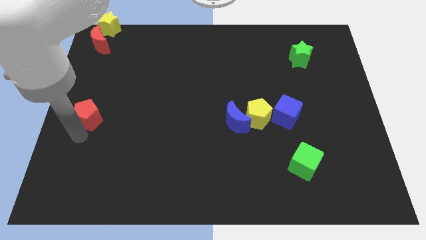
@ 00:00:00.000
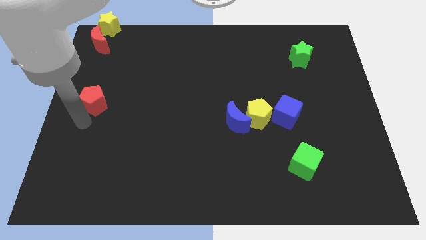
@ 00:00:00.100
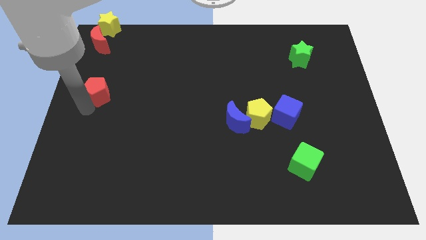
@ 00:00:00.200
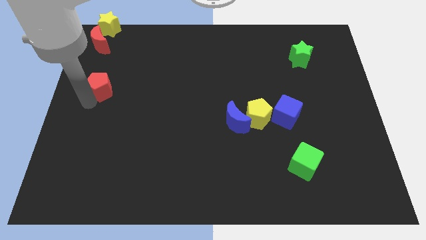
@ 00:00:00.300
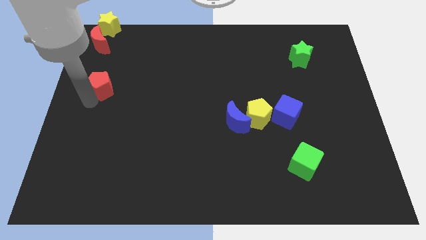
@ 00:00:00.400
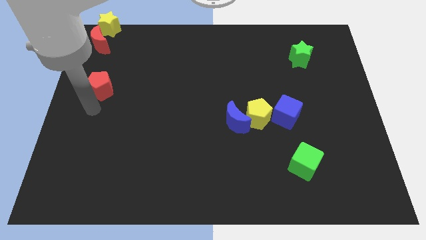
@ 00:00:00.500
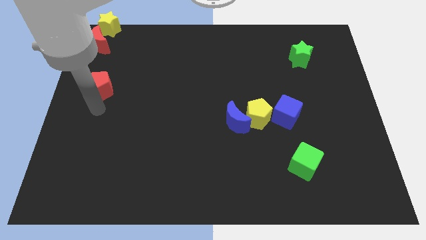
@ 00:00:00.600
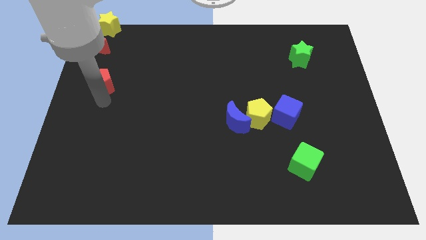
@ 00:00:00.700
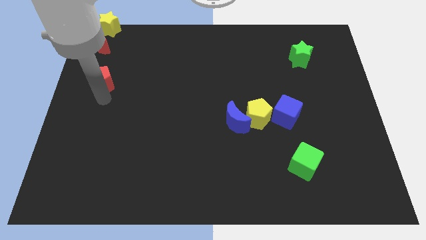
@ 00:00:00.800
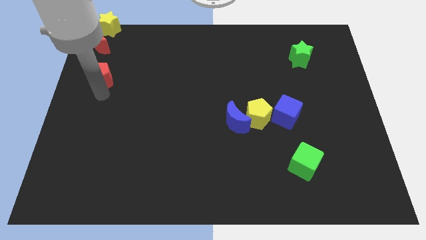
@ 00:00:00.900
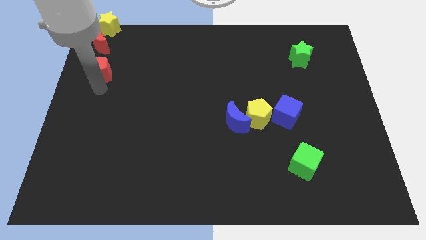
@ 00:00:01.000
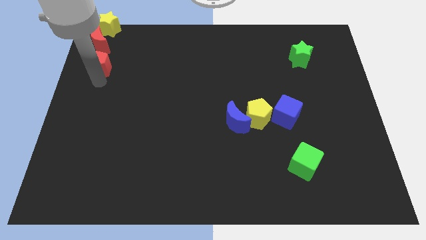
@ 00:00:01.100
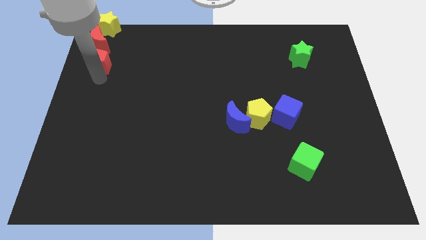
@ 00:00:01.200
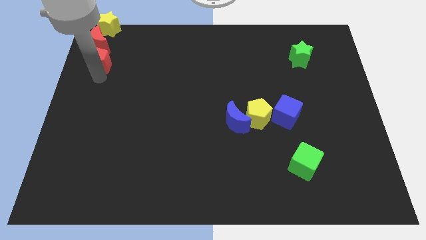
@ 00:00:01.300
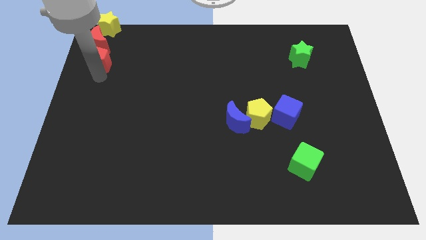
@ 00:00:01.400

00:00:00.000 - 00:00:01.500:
place red pentagon below red crescent

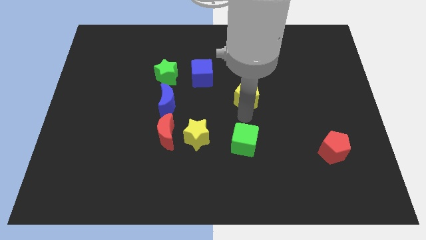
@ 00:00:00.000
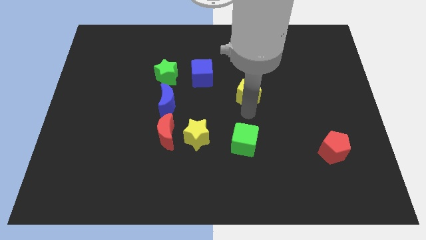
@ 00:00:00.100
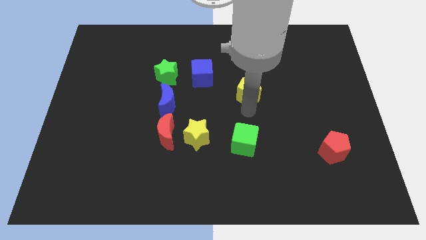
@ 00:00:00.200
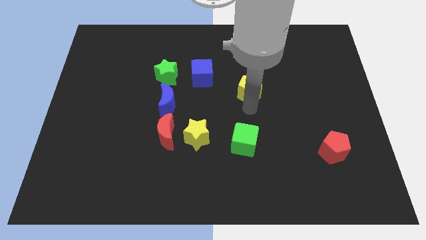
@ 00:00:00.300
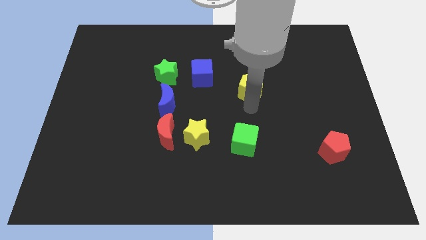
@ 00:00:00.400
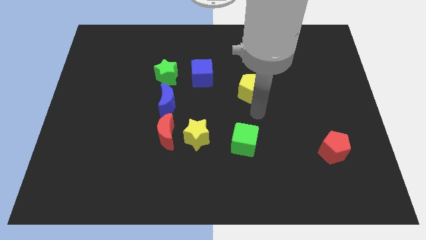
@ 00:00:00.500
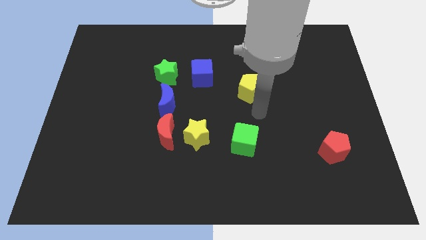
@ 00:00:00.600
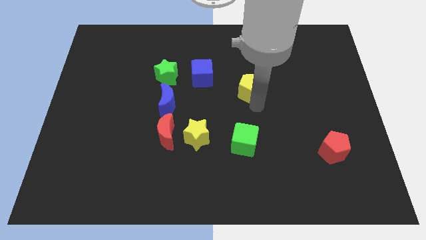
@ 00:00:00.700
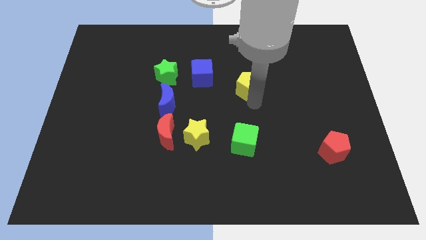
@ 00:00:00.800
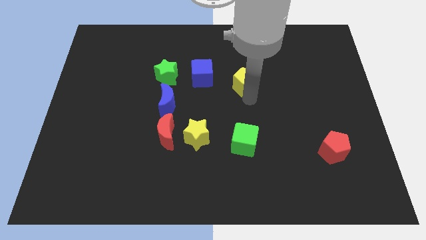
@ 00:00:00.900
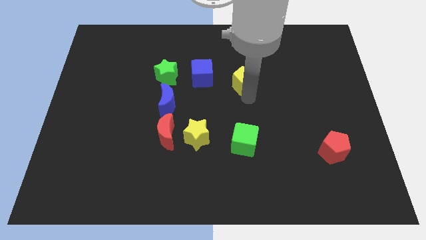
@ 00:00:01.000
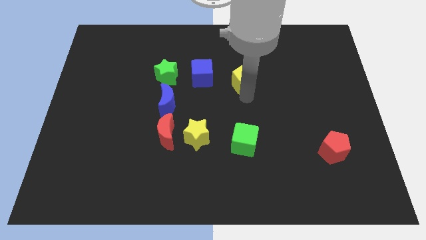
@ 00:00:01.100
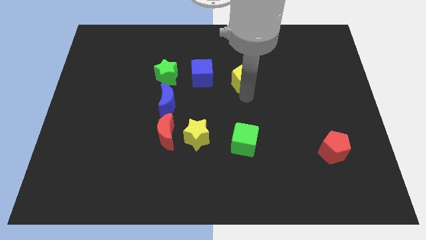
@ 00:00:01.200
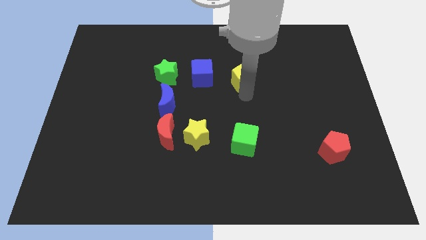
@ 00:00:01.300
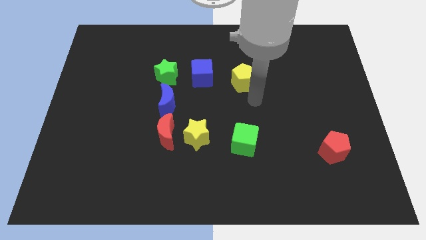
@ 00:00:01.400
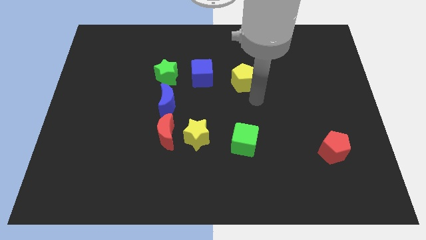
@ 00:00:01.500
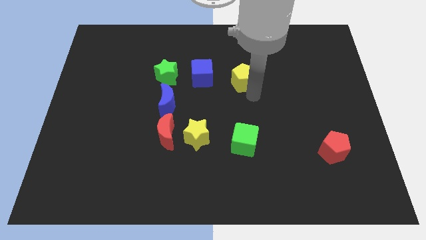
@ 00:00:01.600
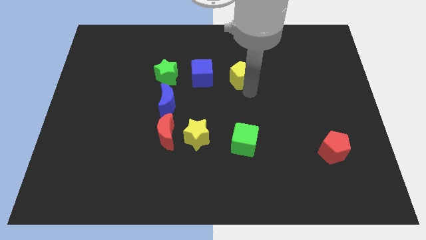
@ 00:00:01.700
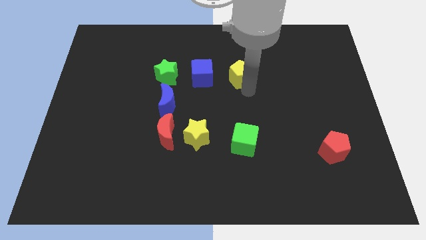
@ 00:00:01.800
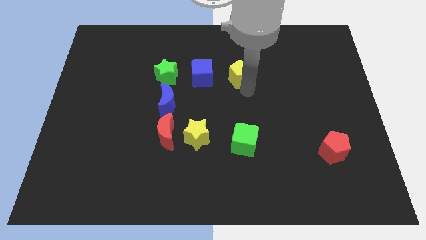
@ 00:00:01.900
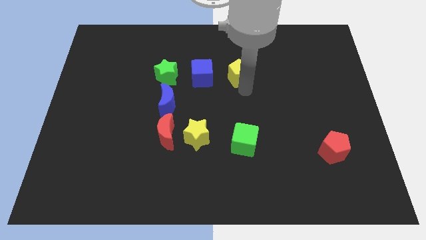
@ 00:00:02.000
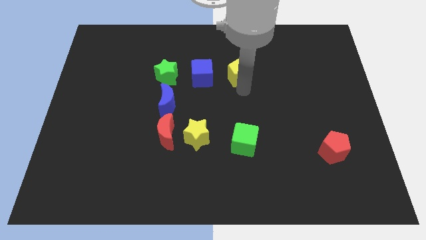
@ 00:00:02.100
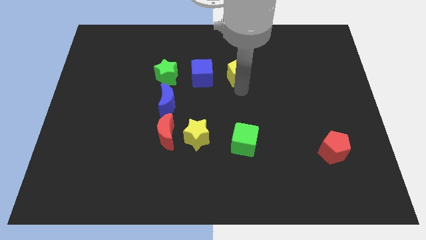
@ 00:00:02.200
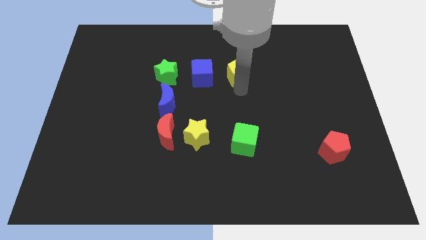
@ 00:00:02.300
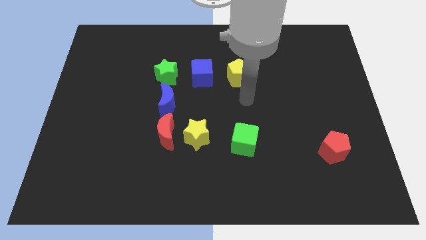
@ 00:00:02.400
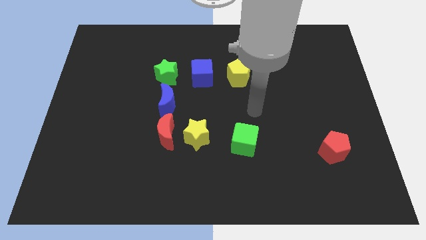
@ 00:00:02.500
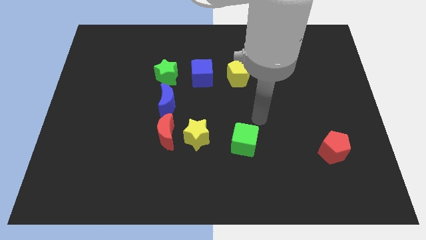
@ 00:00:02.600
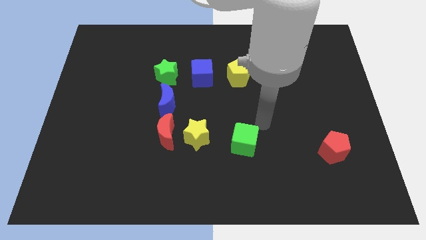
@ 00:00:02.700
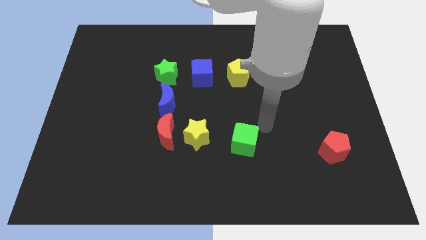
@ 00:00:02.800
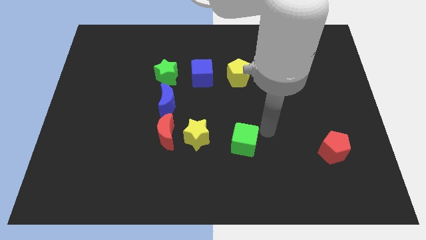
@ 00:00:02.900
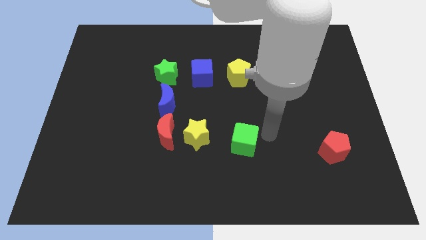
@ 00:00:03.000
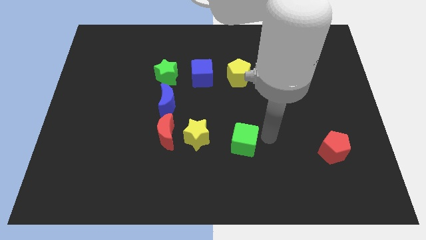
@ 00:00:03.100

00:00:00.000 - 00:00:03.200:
move the yellow pentagon parallel to the top of the green cube

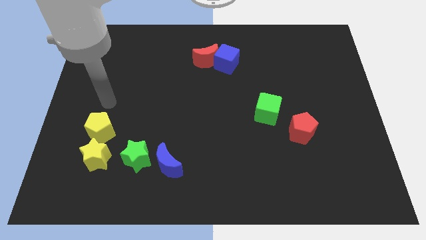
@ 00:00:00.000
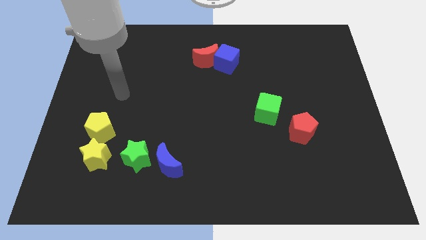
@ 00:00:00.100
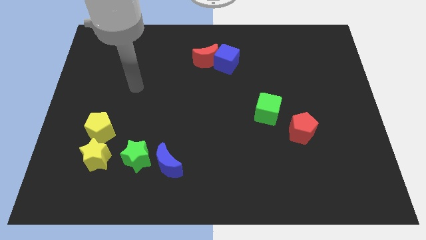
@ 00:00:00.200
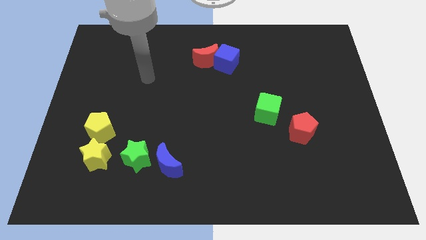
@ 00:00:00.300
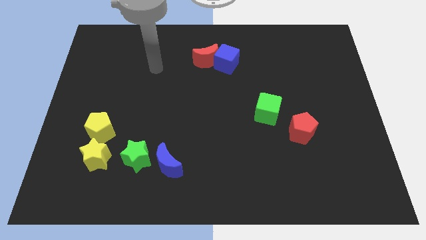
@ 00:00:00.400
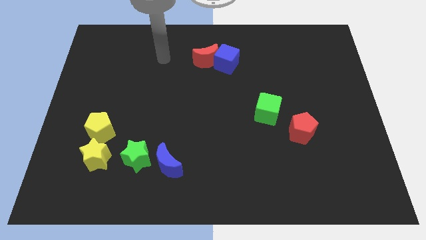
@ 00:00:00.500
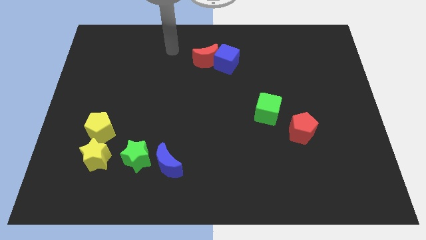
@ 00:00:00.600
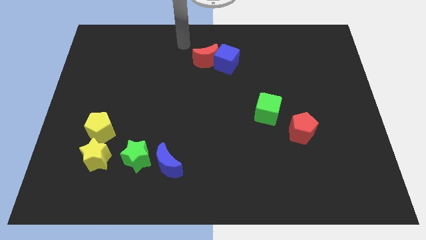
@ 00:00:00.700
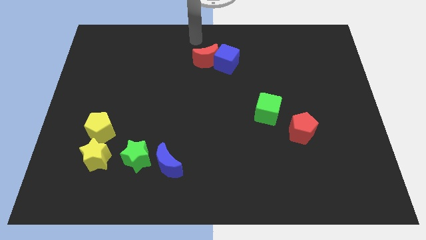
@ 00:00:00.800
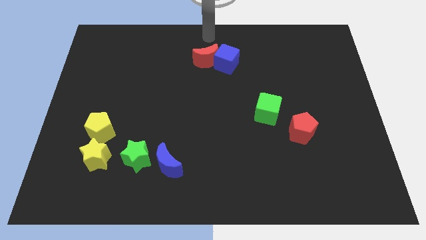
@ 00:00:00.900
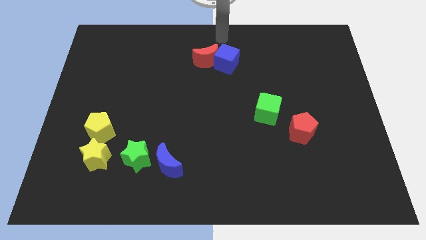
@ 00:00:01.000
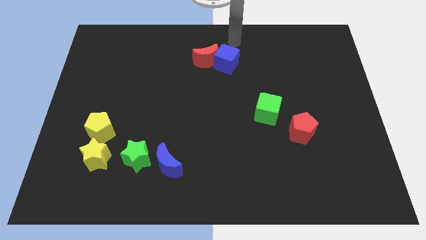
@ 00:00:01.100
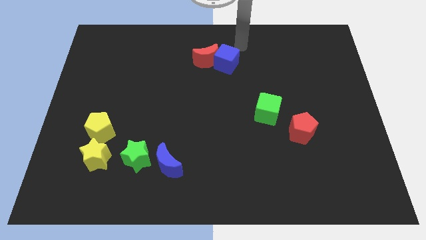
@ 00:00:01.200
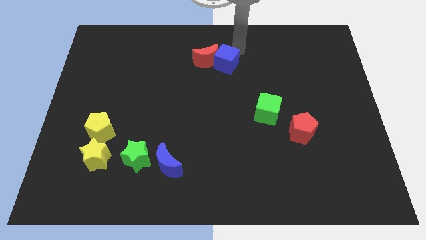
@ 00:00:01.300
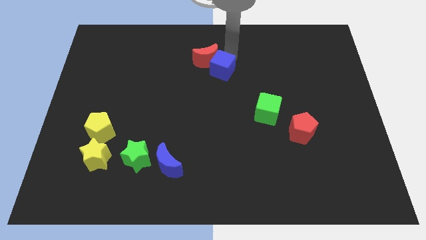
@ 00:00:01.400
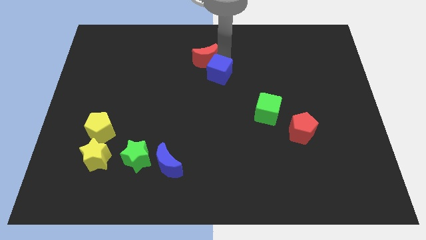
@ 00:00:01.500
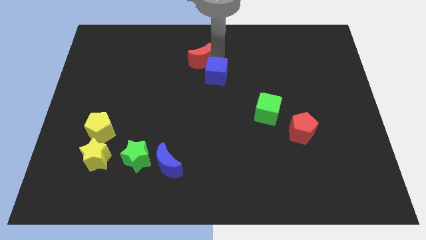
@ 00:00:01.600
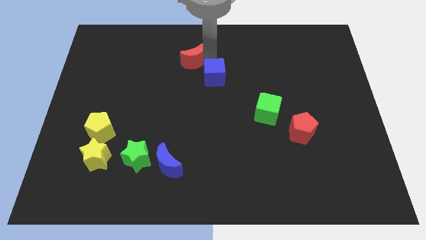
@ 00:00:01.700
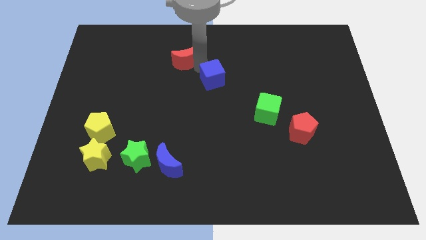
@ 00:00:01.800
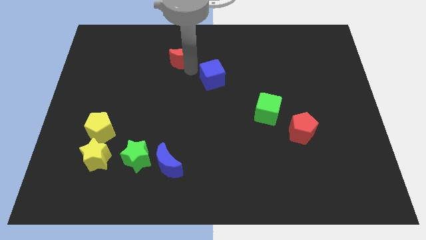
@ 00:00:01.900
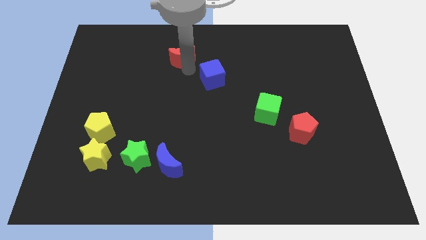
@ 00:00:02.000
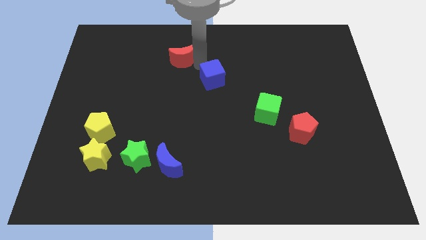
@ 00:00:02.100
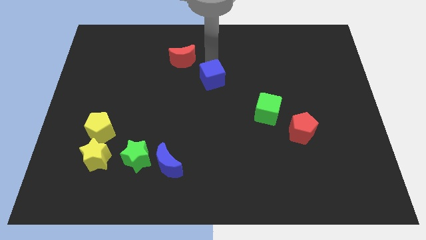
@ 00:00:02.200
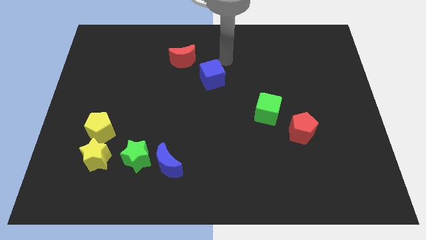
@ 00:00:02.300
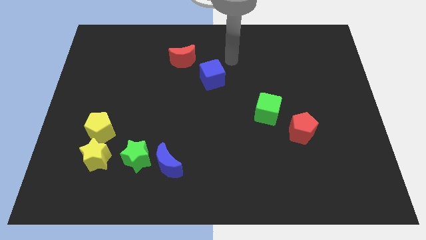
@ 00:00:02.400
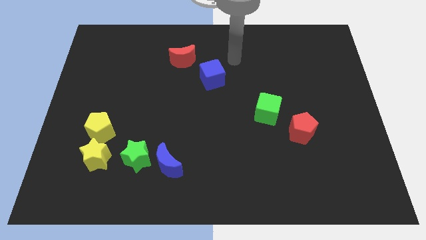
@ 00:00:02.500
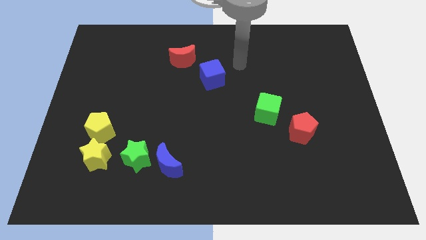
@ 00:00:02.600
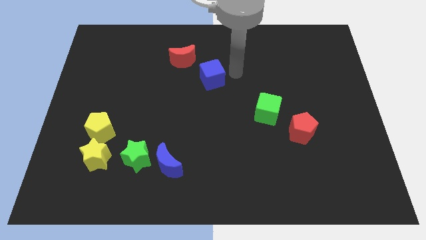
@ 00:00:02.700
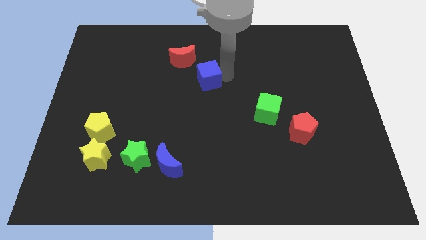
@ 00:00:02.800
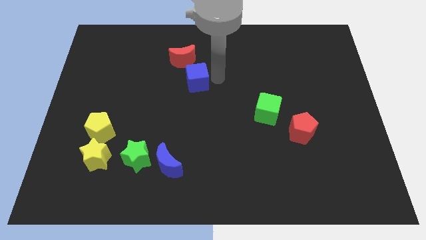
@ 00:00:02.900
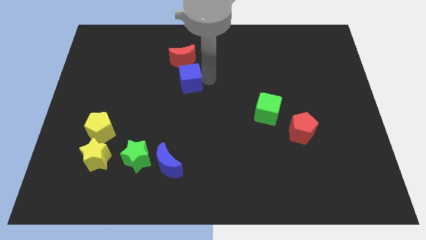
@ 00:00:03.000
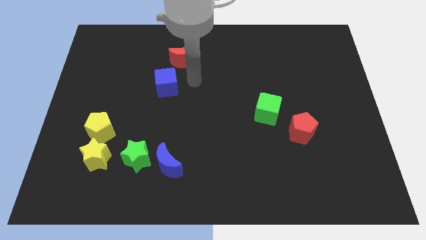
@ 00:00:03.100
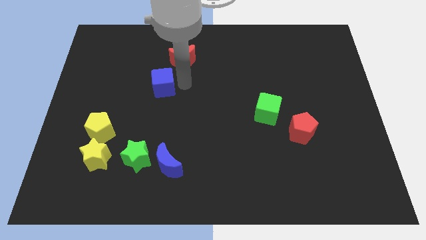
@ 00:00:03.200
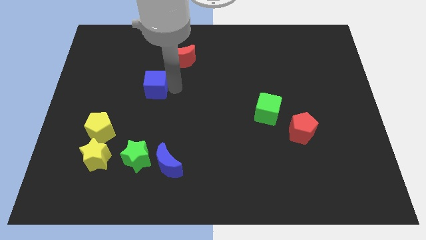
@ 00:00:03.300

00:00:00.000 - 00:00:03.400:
separate blue cube from red moon

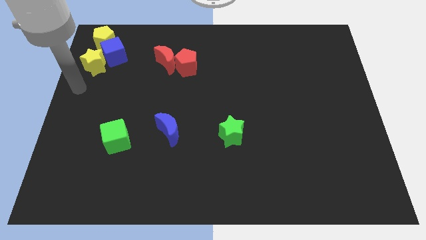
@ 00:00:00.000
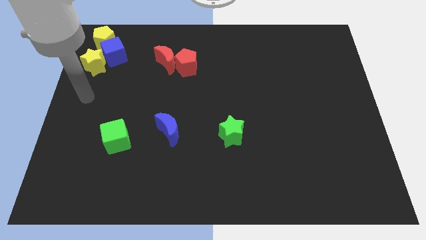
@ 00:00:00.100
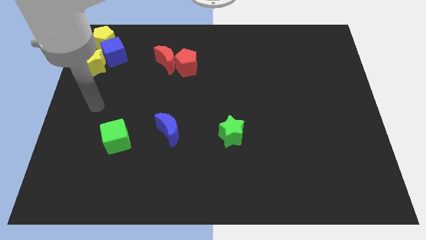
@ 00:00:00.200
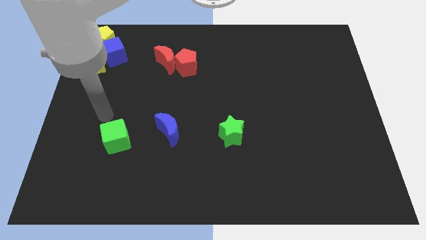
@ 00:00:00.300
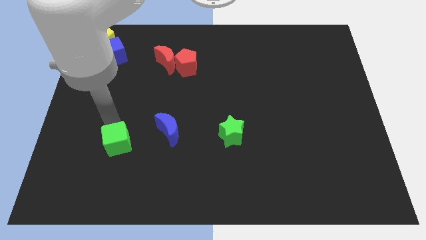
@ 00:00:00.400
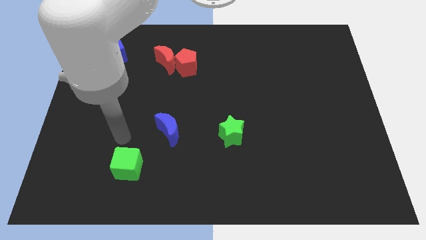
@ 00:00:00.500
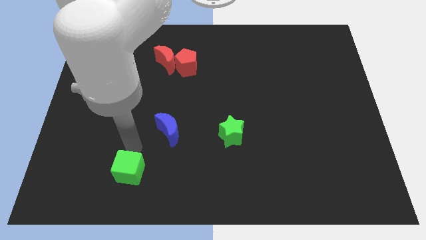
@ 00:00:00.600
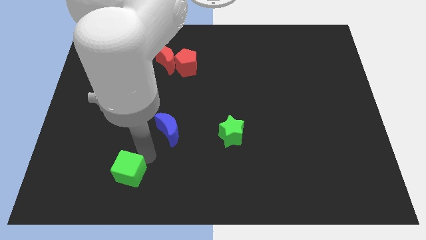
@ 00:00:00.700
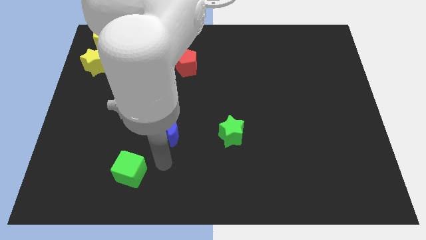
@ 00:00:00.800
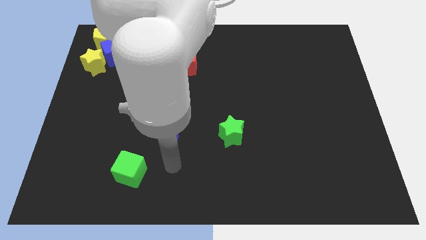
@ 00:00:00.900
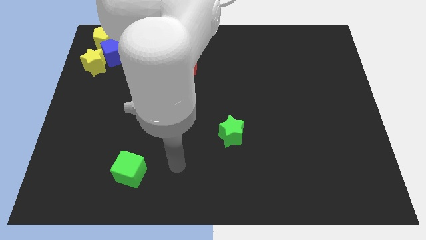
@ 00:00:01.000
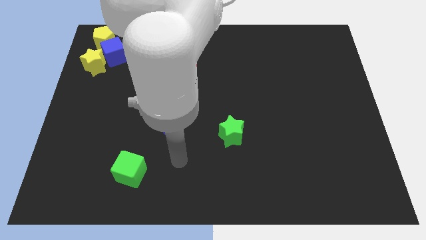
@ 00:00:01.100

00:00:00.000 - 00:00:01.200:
touch the green cube
